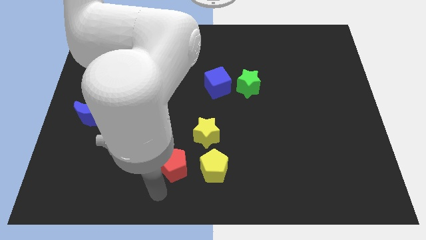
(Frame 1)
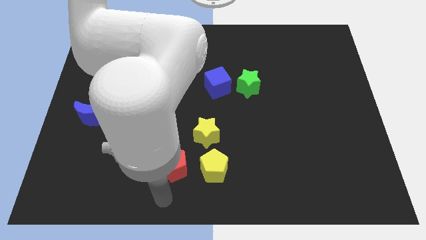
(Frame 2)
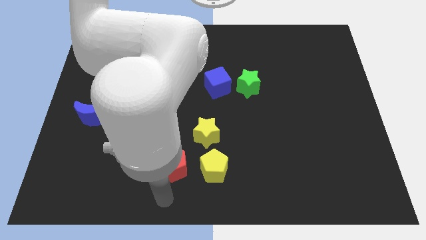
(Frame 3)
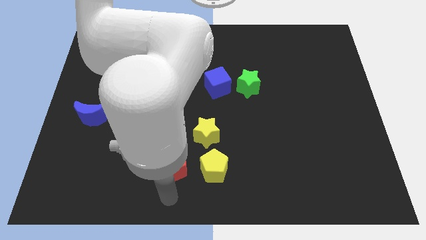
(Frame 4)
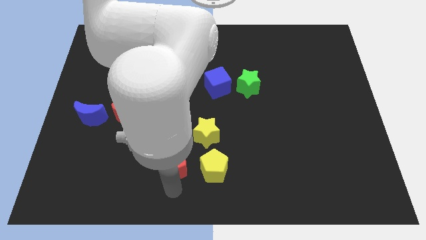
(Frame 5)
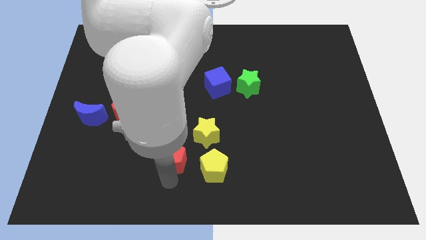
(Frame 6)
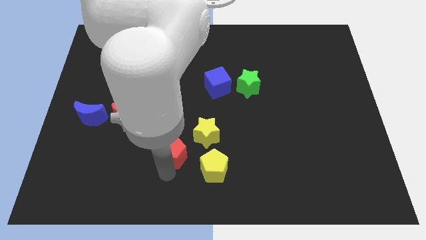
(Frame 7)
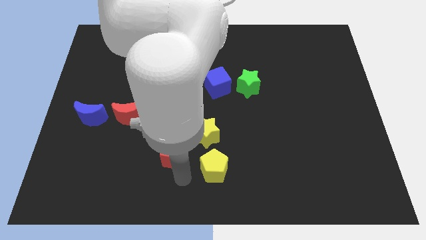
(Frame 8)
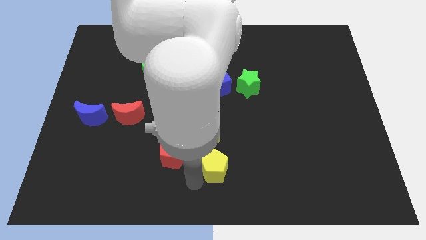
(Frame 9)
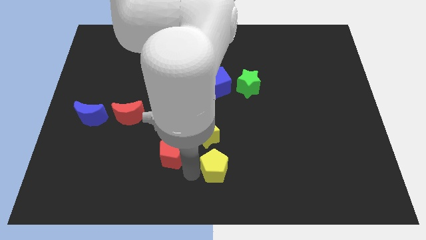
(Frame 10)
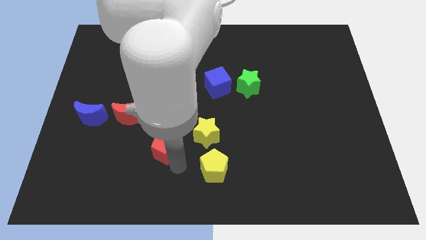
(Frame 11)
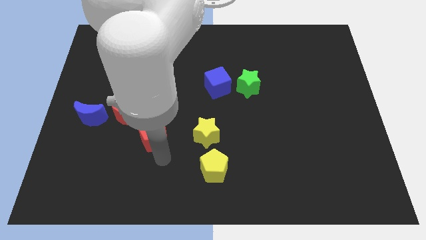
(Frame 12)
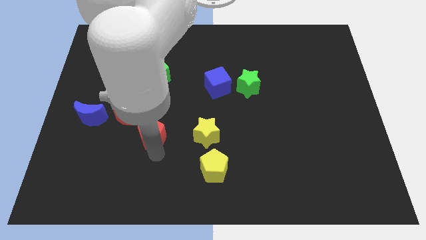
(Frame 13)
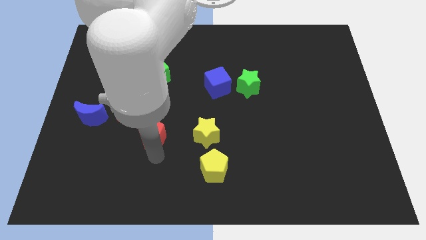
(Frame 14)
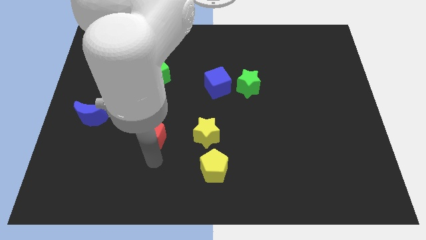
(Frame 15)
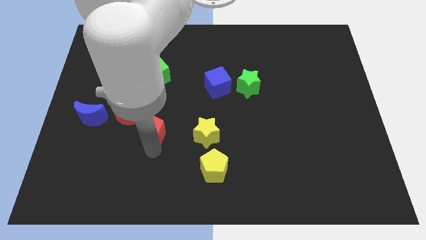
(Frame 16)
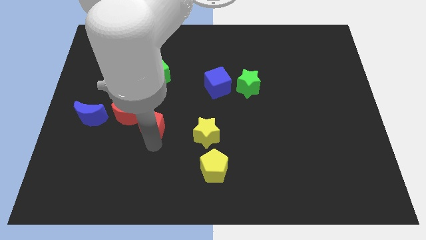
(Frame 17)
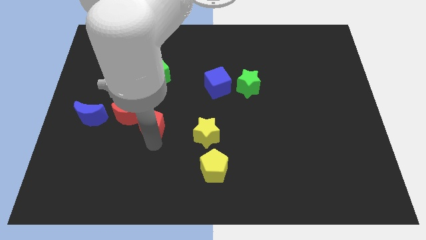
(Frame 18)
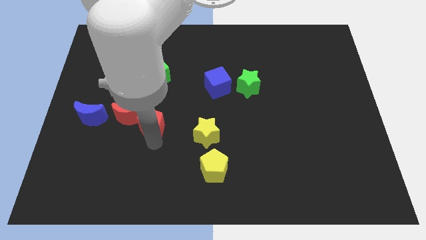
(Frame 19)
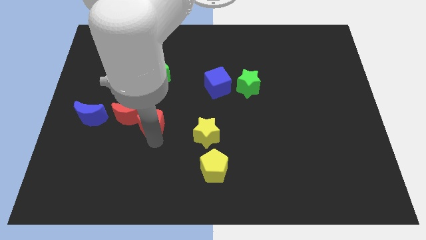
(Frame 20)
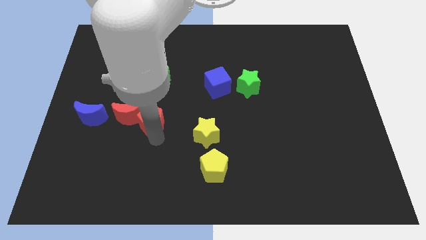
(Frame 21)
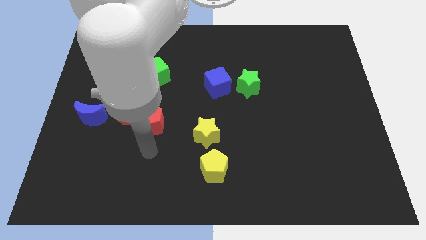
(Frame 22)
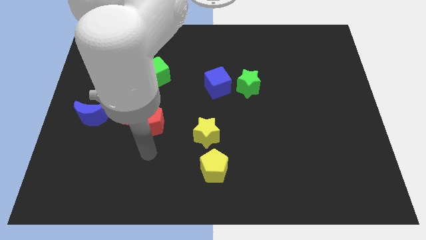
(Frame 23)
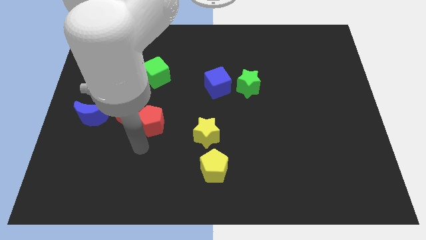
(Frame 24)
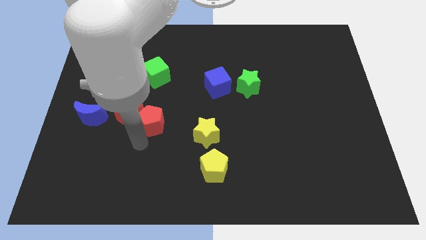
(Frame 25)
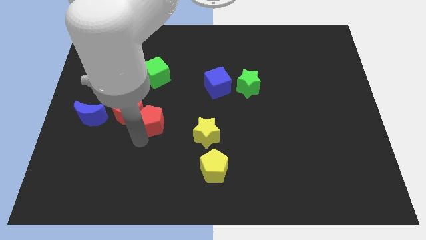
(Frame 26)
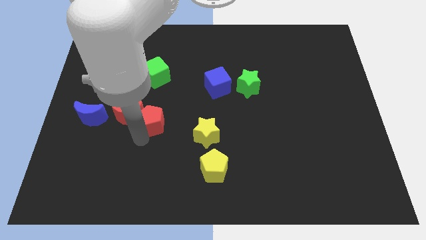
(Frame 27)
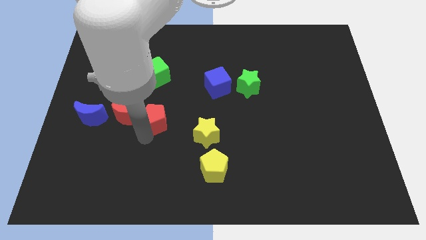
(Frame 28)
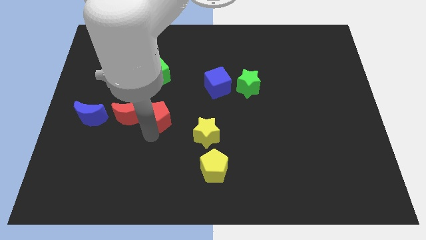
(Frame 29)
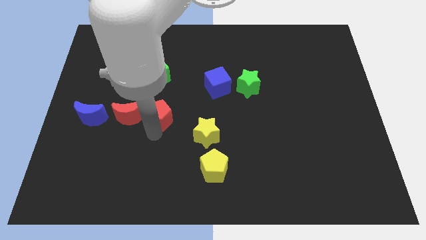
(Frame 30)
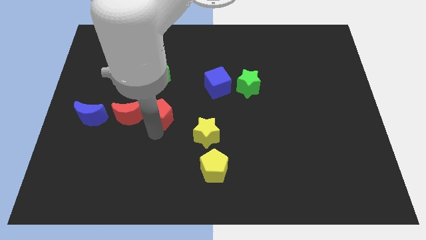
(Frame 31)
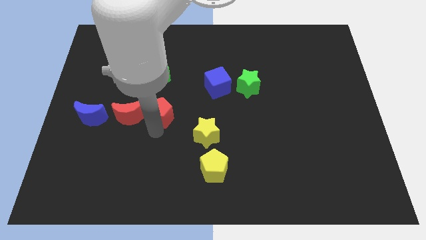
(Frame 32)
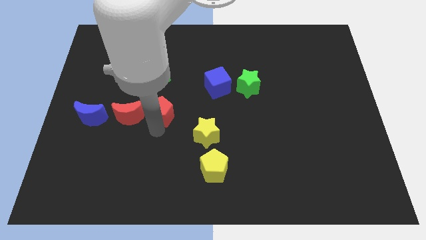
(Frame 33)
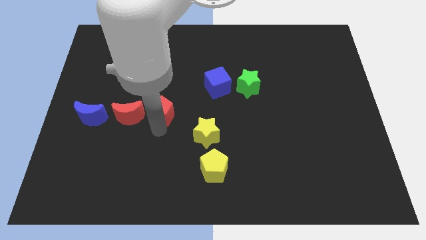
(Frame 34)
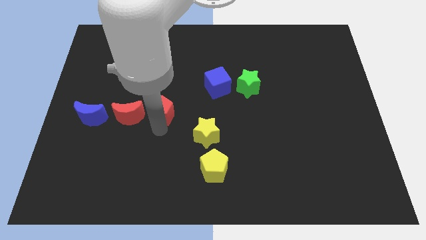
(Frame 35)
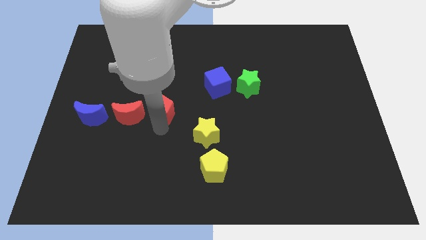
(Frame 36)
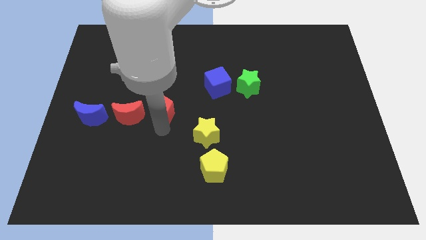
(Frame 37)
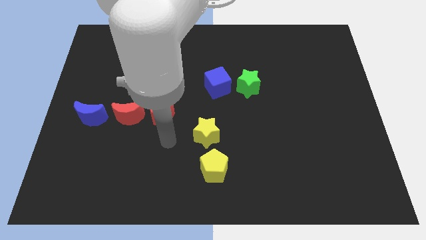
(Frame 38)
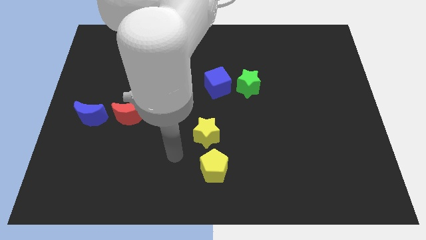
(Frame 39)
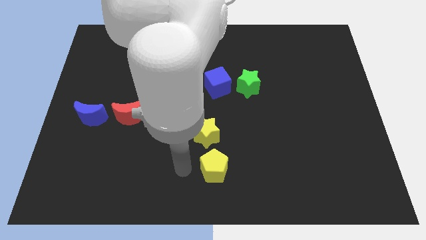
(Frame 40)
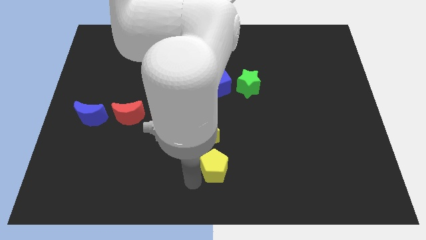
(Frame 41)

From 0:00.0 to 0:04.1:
move red pentagon towards right side of the red crescent

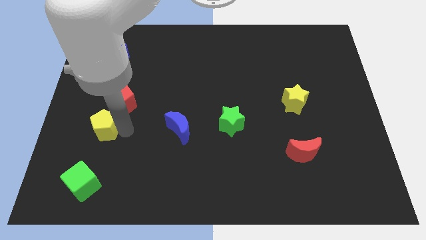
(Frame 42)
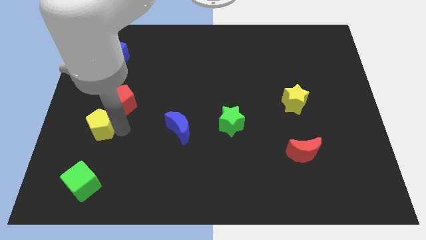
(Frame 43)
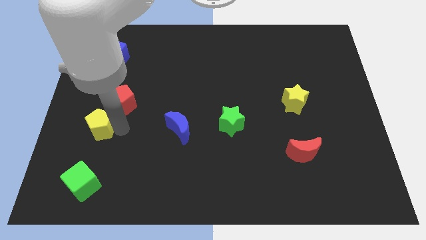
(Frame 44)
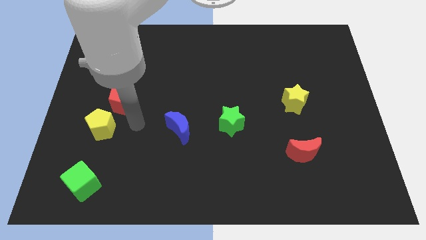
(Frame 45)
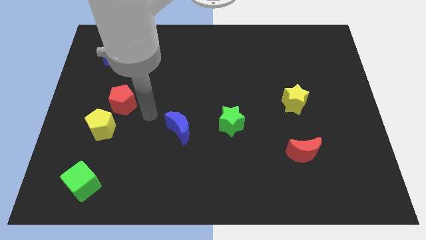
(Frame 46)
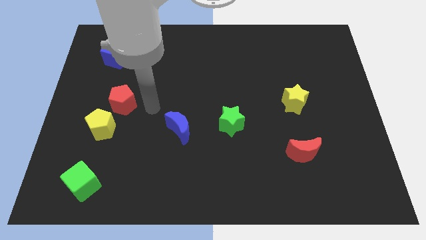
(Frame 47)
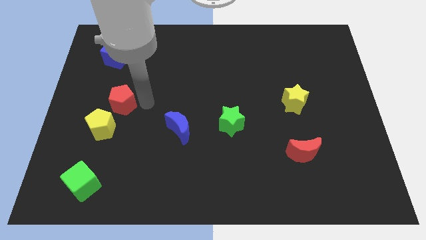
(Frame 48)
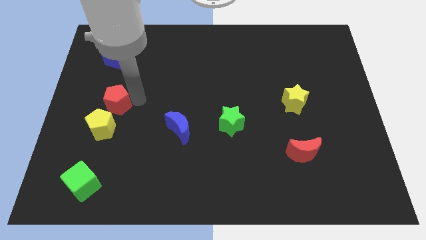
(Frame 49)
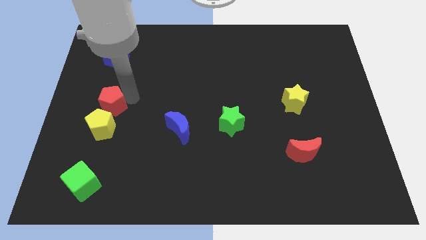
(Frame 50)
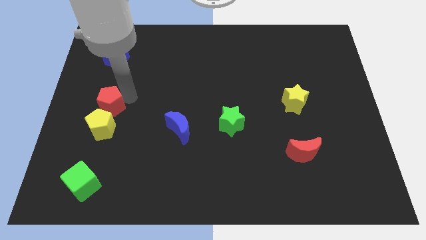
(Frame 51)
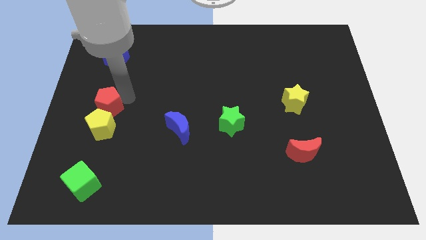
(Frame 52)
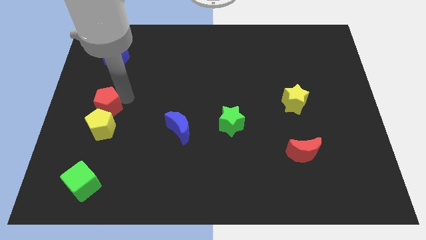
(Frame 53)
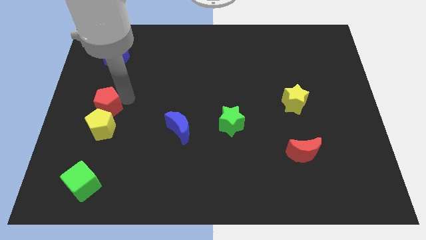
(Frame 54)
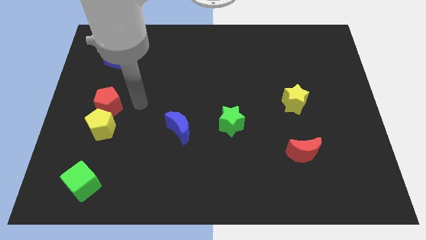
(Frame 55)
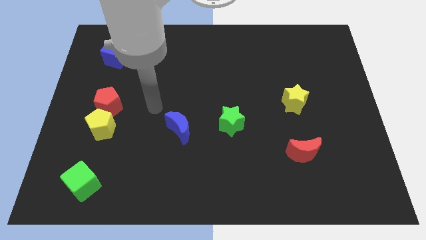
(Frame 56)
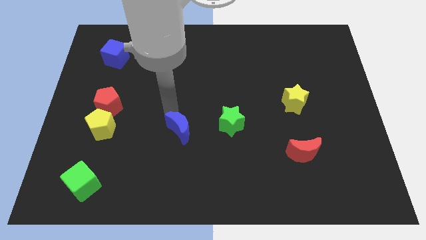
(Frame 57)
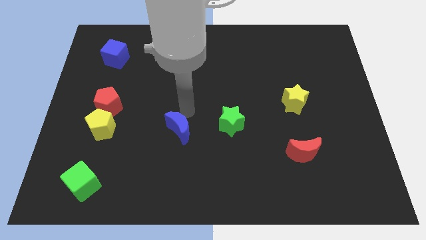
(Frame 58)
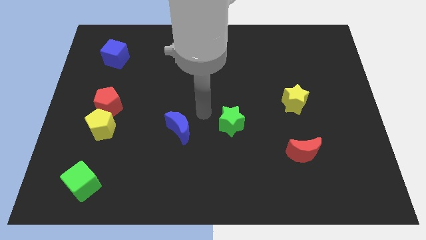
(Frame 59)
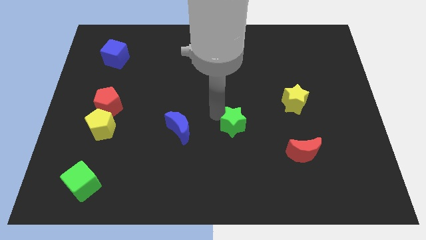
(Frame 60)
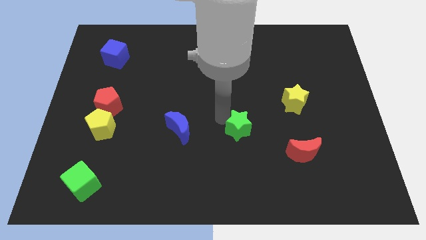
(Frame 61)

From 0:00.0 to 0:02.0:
adjust the red pentagon vertically above the yellow pentagon

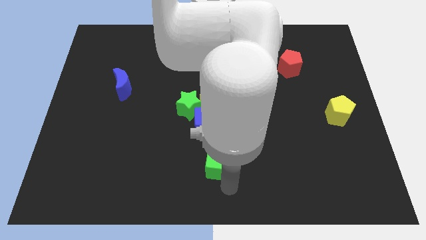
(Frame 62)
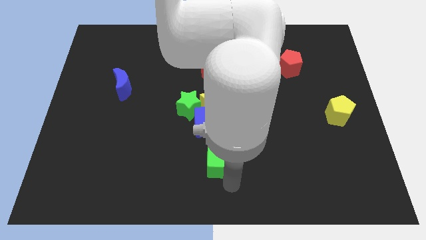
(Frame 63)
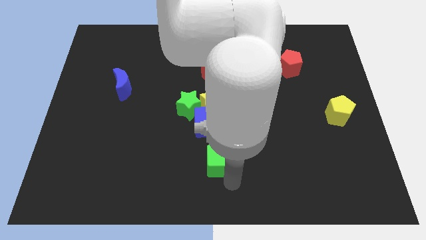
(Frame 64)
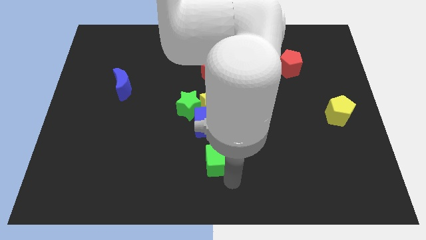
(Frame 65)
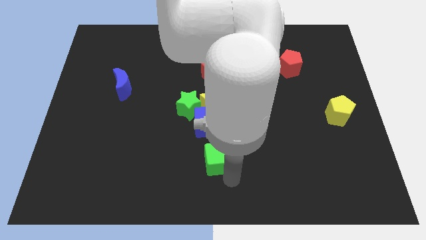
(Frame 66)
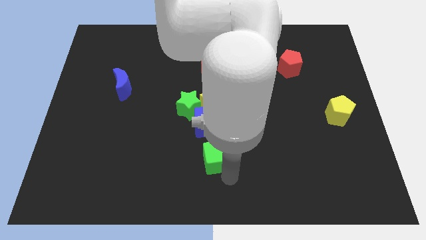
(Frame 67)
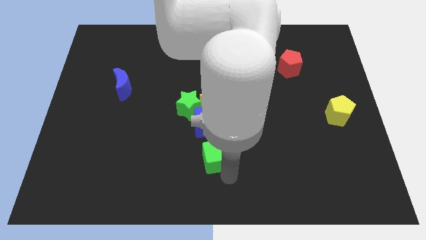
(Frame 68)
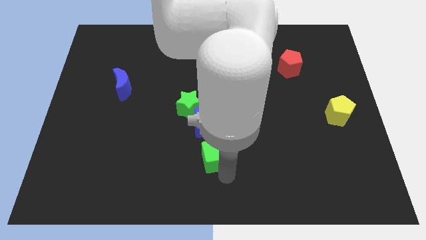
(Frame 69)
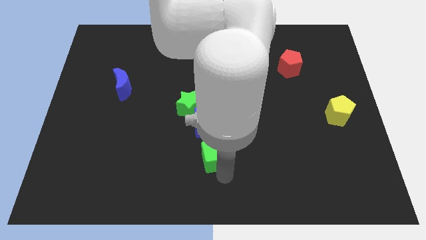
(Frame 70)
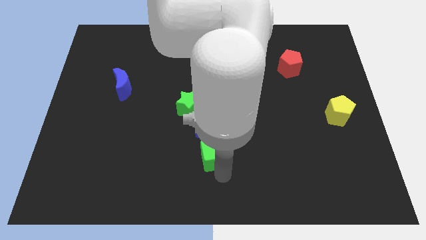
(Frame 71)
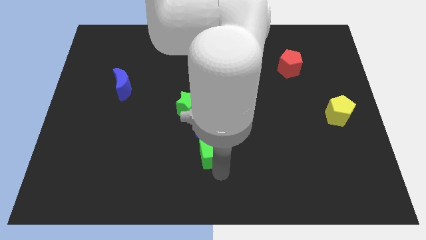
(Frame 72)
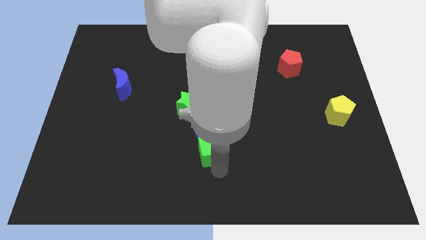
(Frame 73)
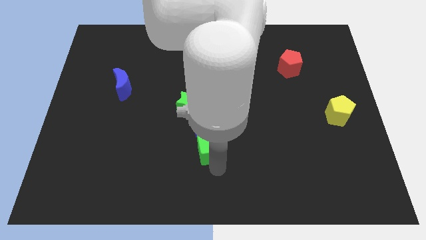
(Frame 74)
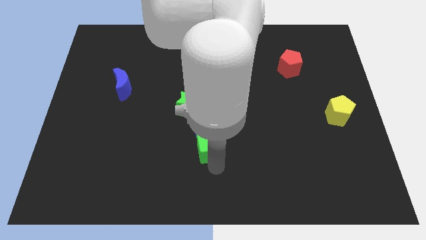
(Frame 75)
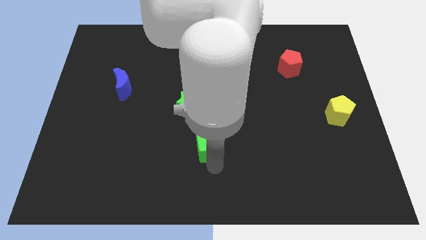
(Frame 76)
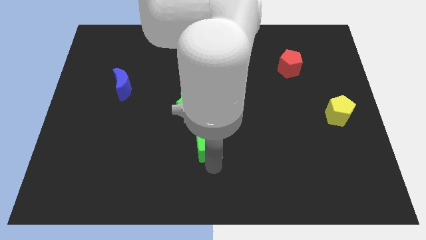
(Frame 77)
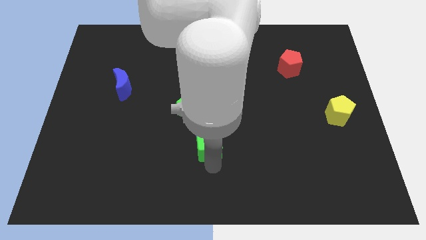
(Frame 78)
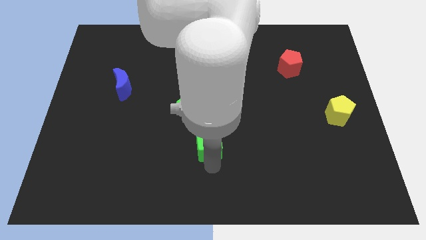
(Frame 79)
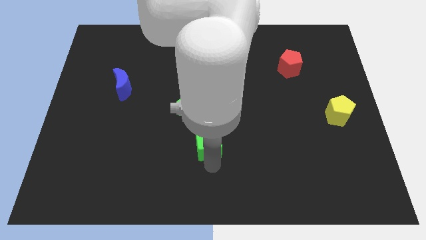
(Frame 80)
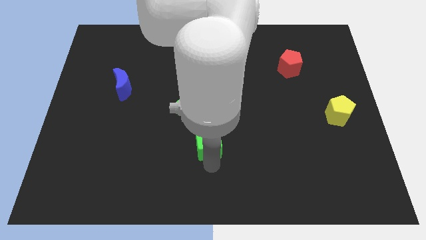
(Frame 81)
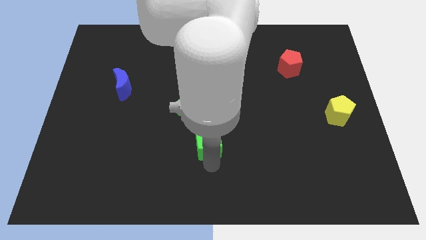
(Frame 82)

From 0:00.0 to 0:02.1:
push the green cube to the bottom of the blue cube

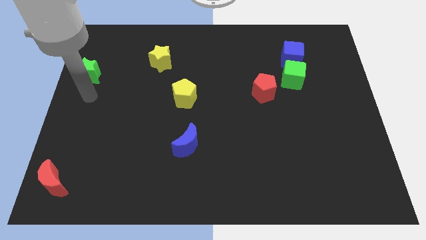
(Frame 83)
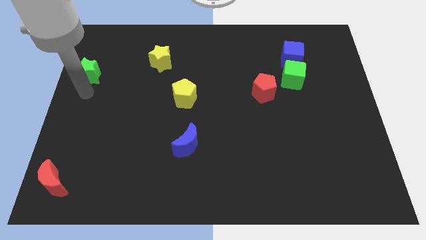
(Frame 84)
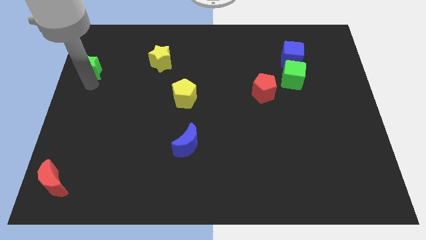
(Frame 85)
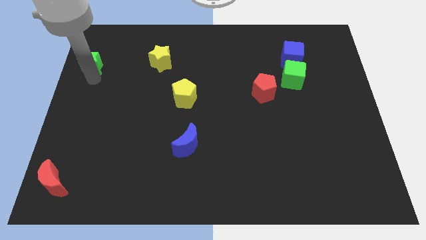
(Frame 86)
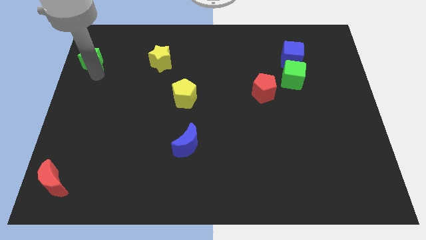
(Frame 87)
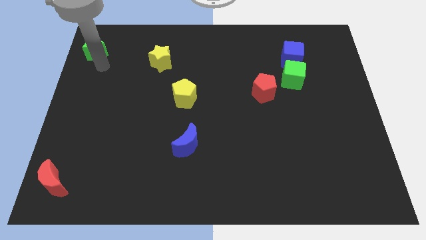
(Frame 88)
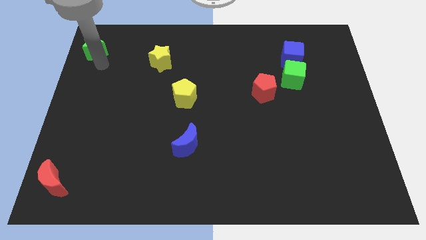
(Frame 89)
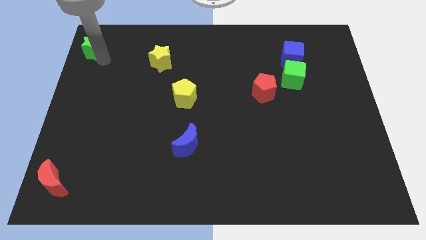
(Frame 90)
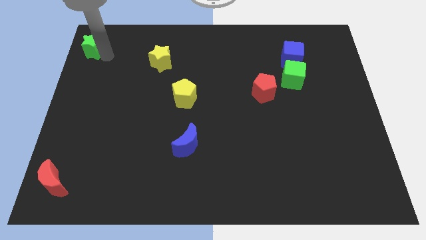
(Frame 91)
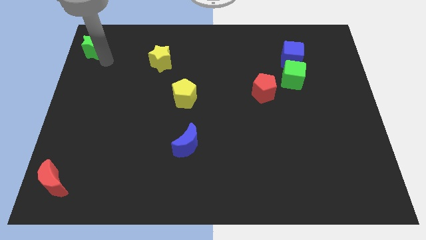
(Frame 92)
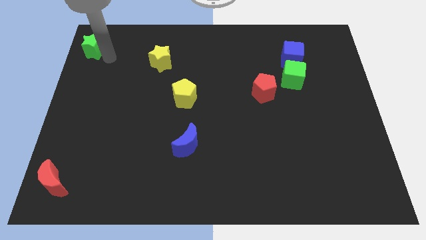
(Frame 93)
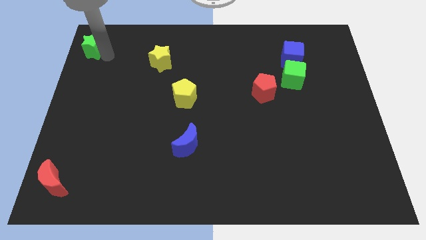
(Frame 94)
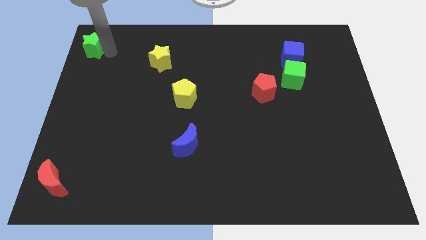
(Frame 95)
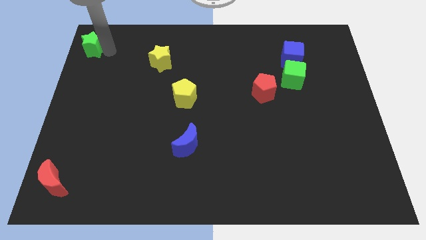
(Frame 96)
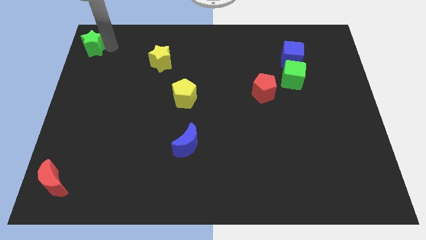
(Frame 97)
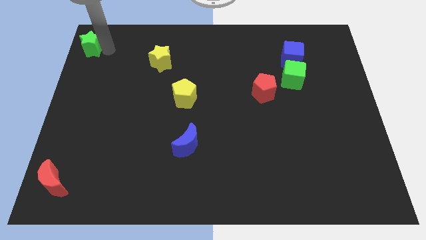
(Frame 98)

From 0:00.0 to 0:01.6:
move the green star to the top left of the board
